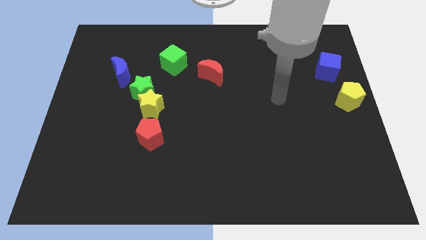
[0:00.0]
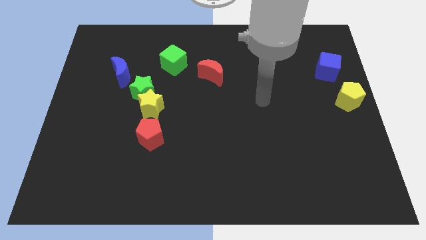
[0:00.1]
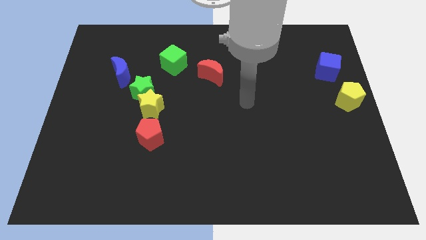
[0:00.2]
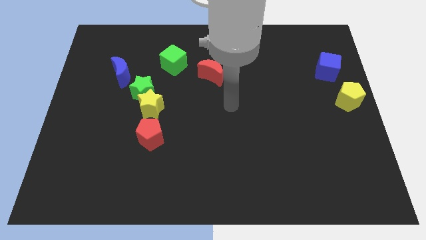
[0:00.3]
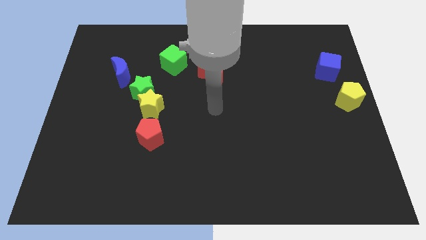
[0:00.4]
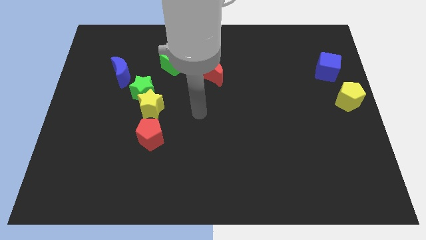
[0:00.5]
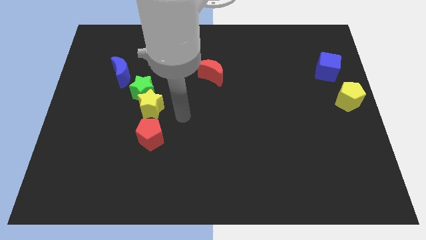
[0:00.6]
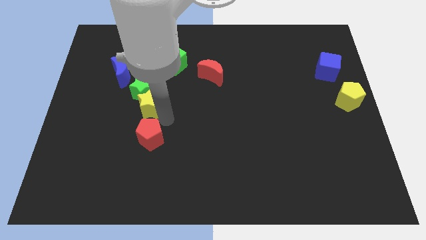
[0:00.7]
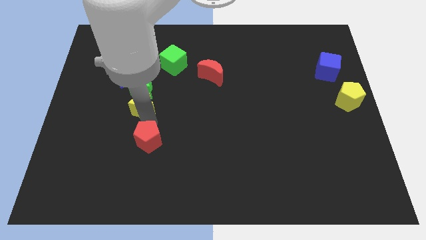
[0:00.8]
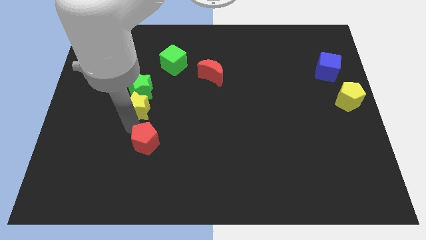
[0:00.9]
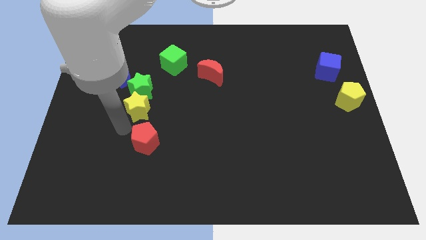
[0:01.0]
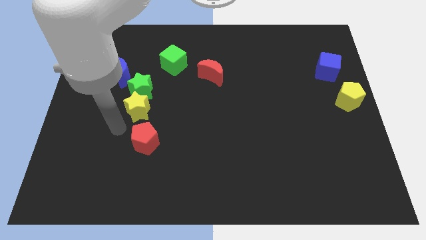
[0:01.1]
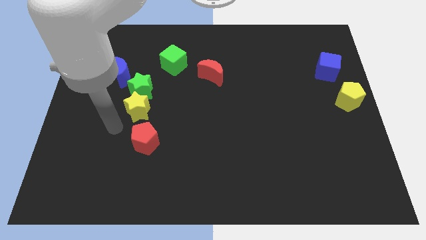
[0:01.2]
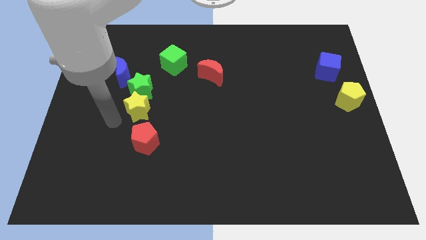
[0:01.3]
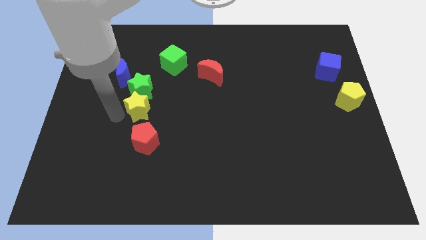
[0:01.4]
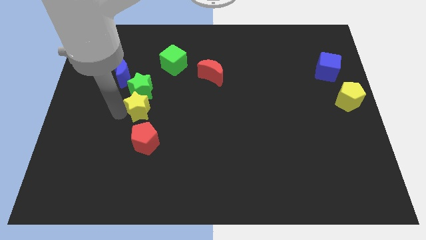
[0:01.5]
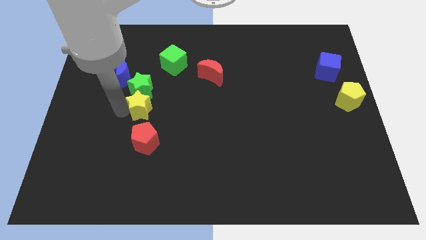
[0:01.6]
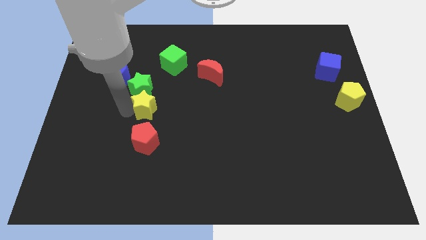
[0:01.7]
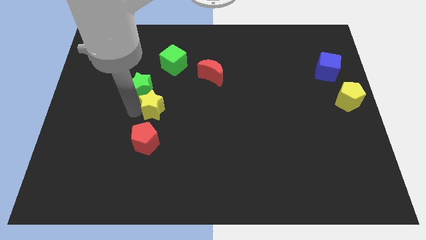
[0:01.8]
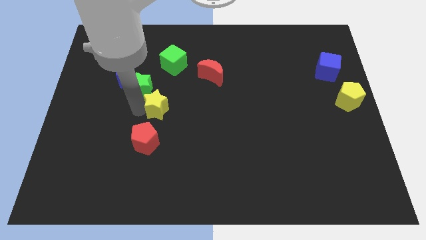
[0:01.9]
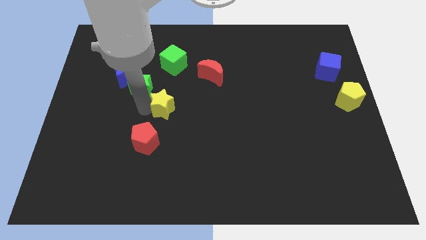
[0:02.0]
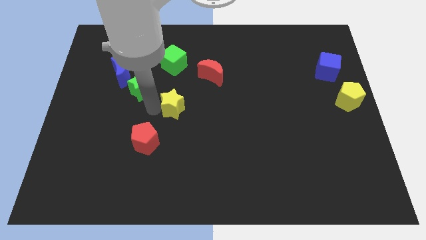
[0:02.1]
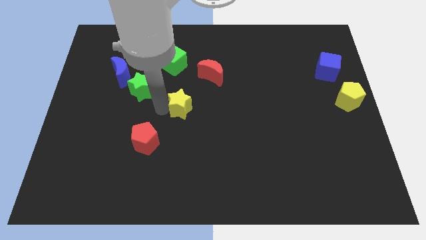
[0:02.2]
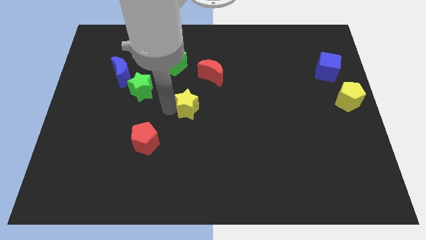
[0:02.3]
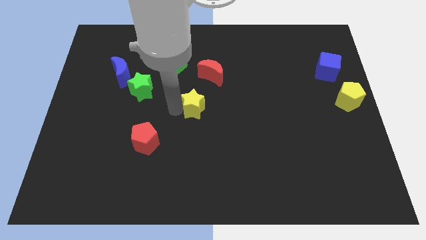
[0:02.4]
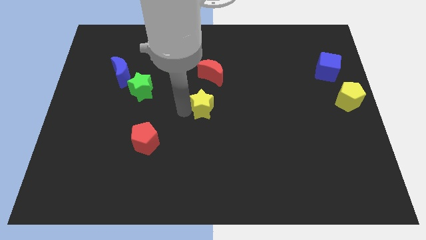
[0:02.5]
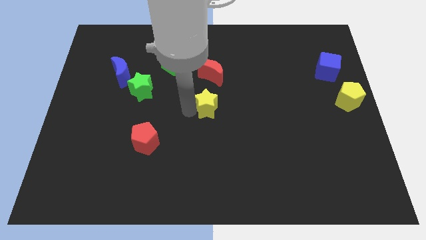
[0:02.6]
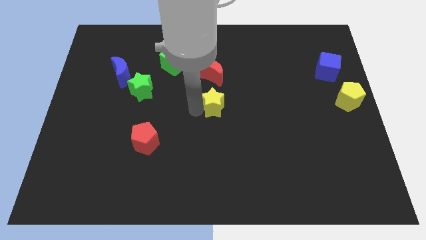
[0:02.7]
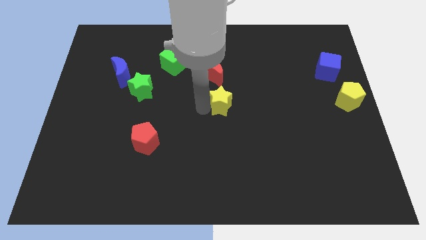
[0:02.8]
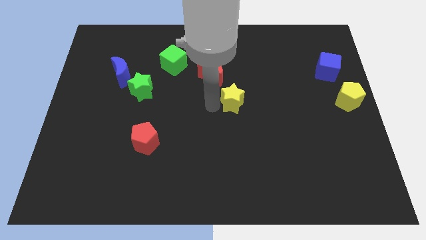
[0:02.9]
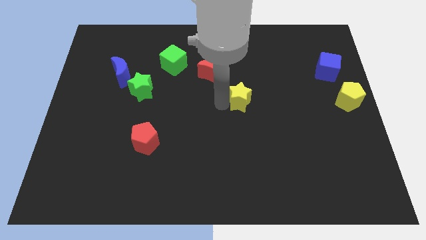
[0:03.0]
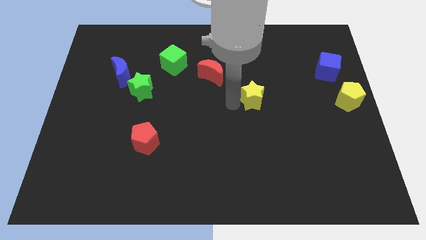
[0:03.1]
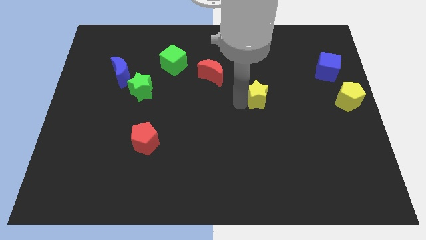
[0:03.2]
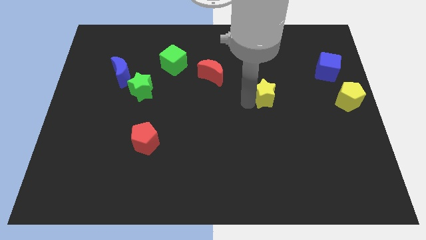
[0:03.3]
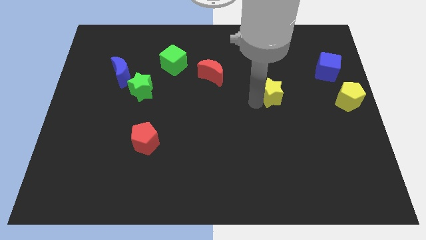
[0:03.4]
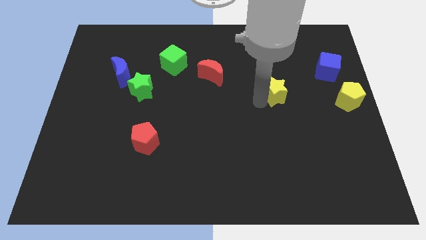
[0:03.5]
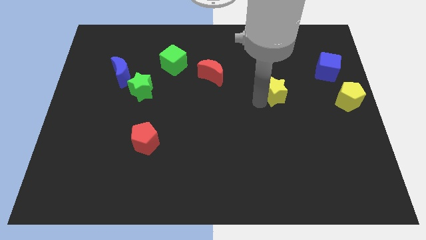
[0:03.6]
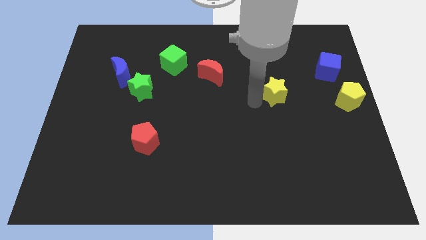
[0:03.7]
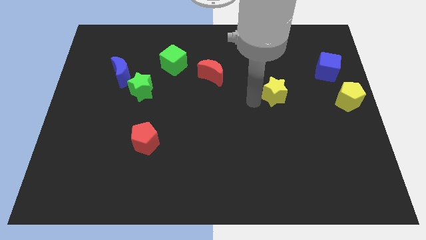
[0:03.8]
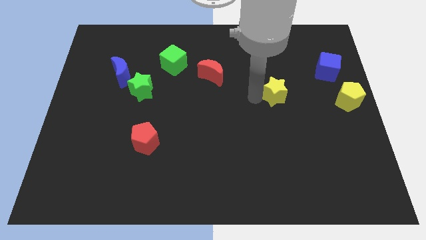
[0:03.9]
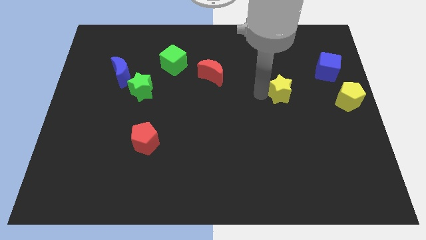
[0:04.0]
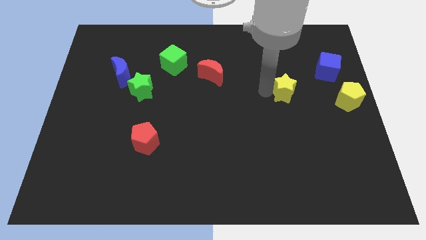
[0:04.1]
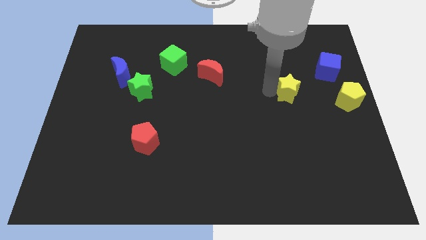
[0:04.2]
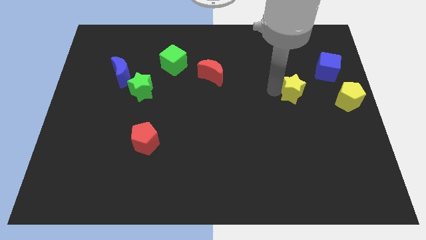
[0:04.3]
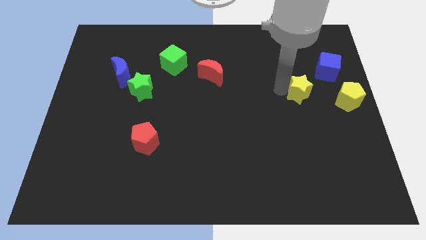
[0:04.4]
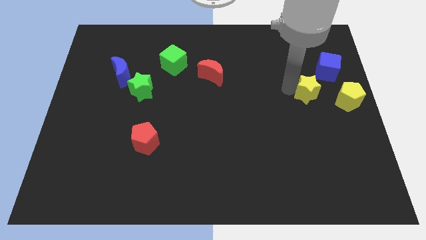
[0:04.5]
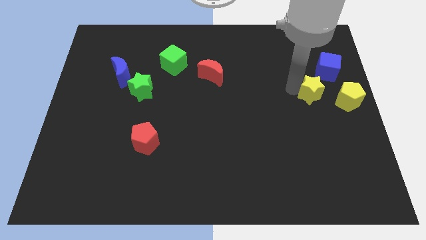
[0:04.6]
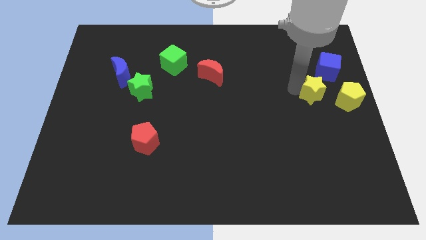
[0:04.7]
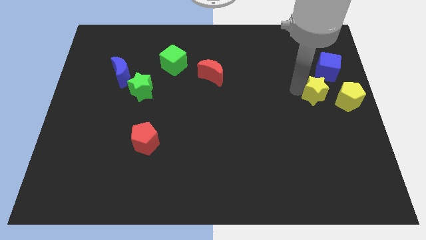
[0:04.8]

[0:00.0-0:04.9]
push the yellow star to the bottom side of the blue cube

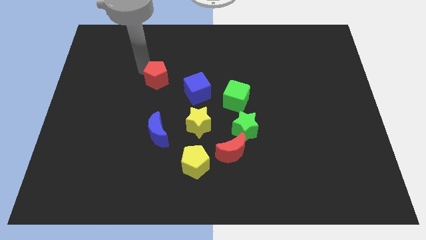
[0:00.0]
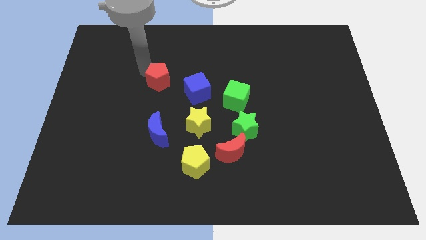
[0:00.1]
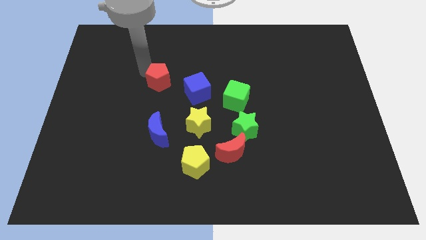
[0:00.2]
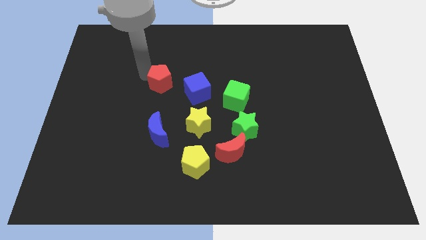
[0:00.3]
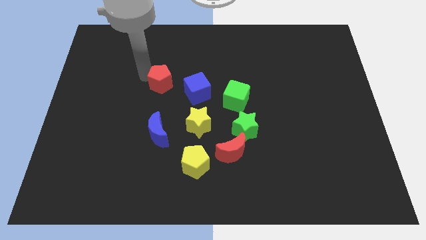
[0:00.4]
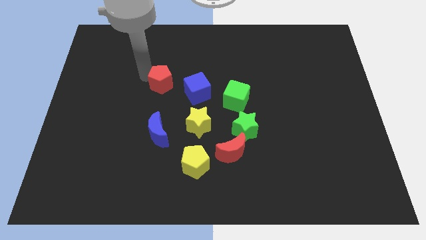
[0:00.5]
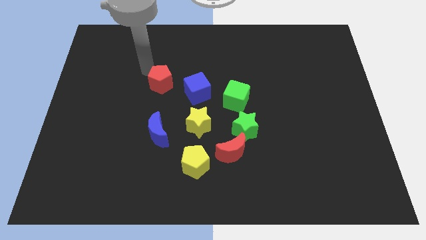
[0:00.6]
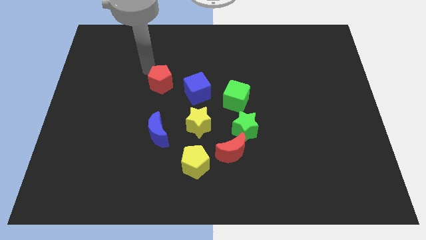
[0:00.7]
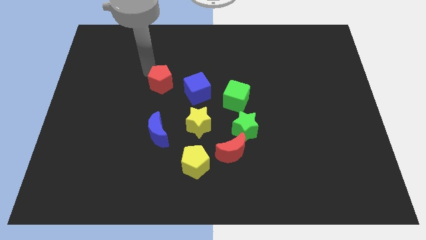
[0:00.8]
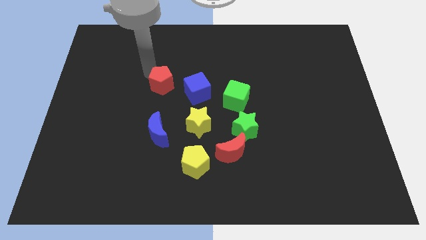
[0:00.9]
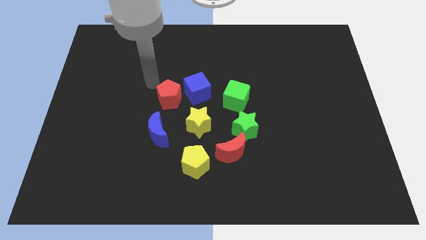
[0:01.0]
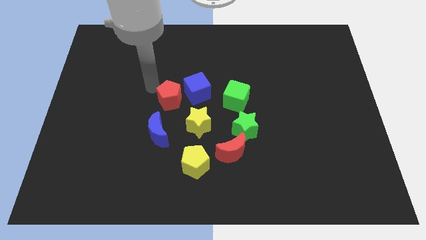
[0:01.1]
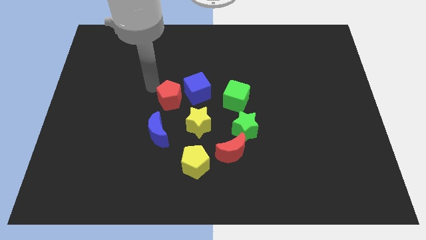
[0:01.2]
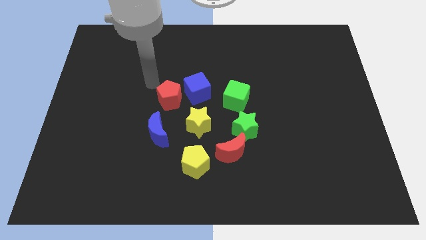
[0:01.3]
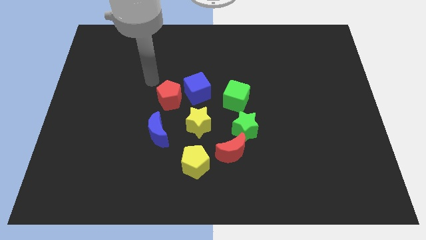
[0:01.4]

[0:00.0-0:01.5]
place red pentagon to the left of blue cube

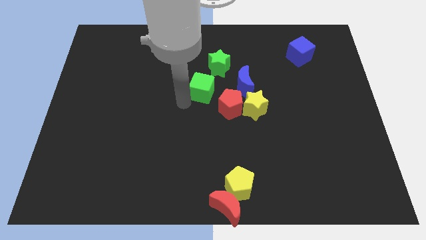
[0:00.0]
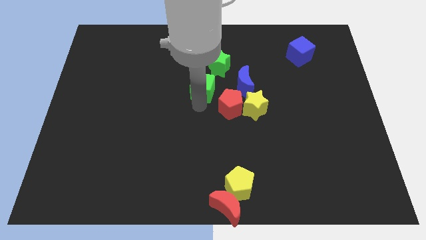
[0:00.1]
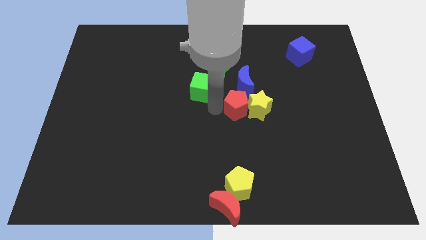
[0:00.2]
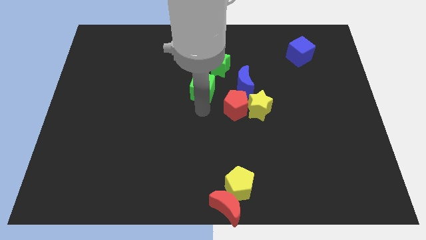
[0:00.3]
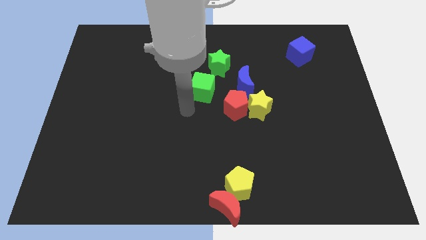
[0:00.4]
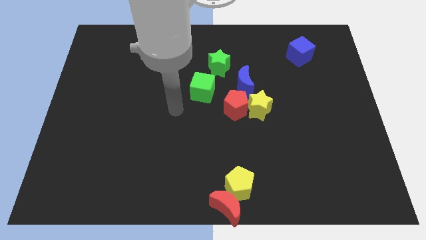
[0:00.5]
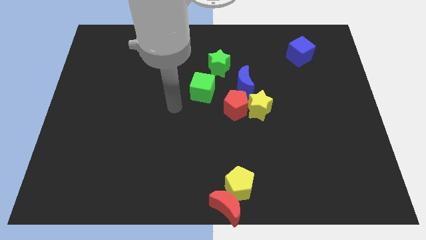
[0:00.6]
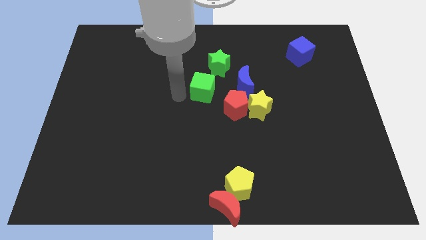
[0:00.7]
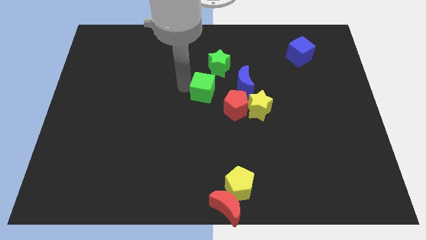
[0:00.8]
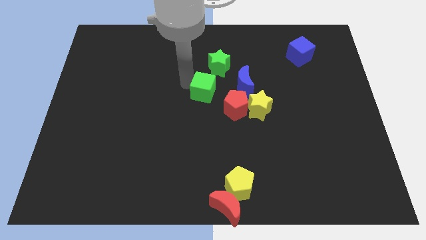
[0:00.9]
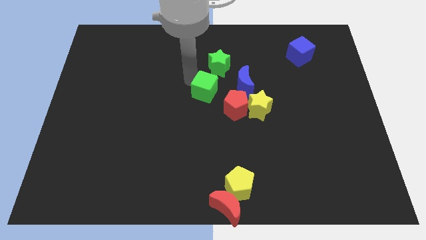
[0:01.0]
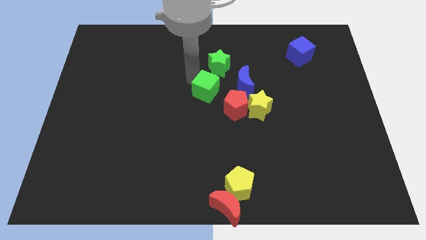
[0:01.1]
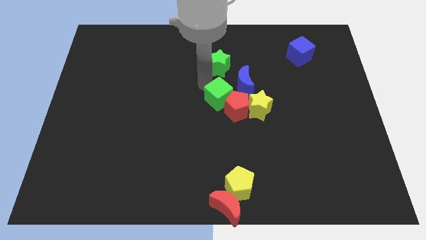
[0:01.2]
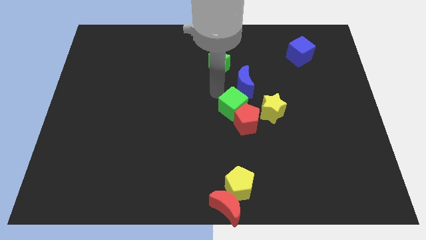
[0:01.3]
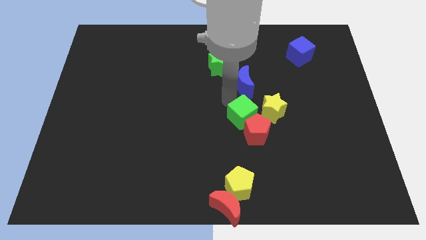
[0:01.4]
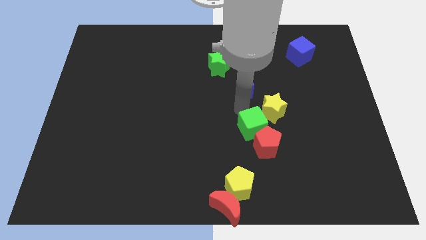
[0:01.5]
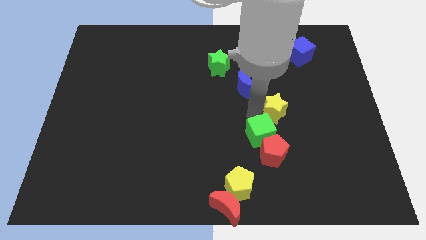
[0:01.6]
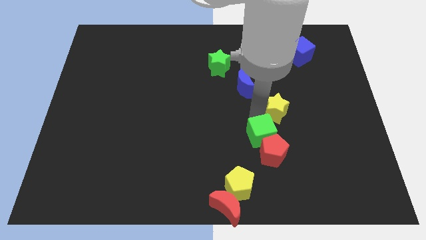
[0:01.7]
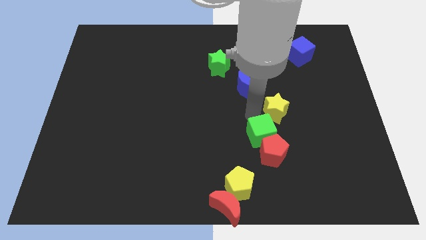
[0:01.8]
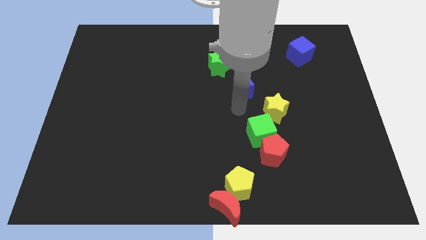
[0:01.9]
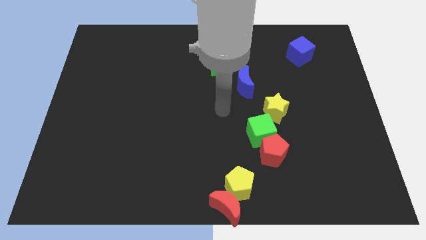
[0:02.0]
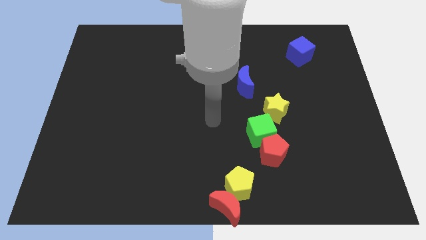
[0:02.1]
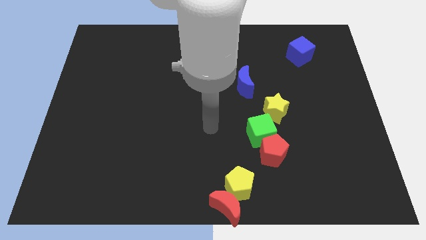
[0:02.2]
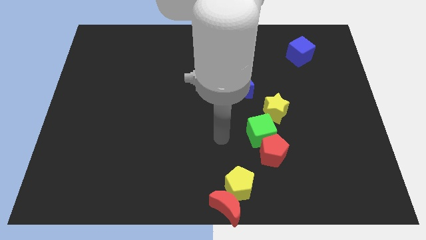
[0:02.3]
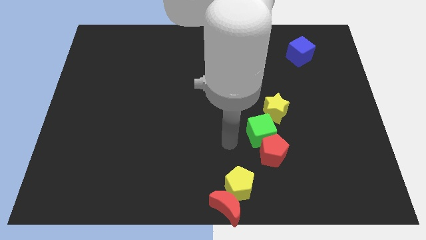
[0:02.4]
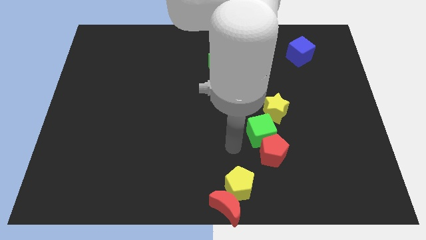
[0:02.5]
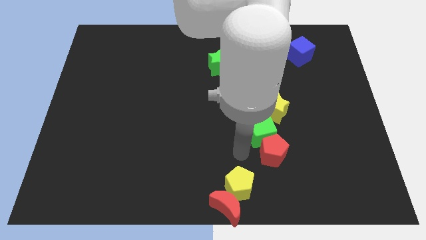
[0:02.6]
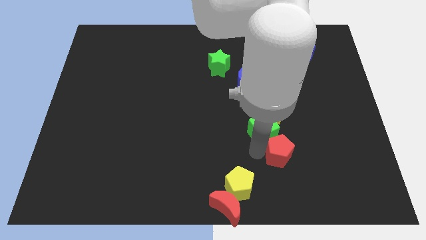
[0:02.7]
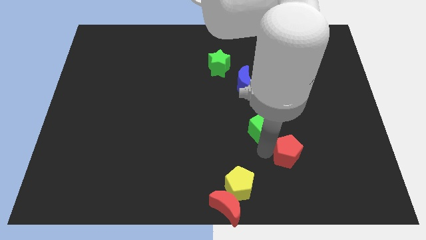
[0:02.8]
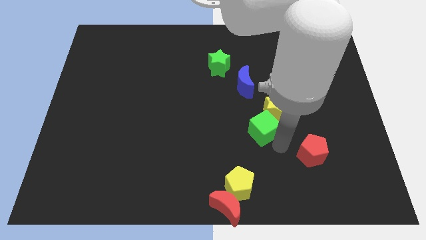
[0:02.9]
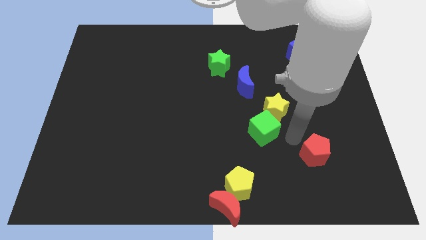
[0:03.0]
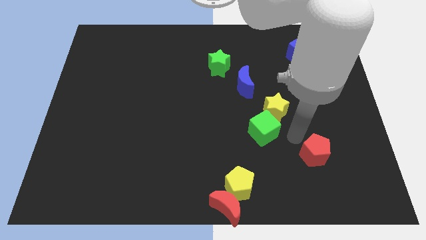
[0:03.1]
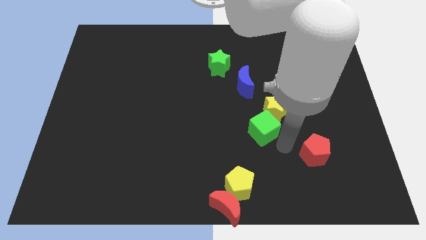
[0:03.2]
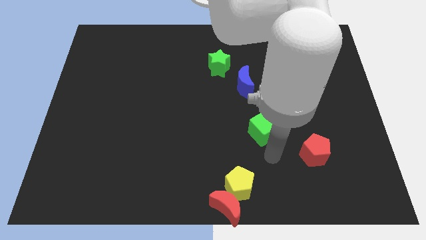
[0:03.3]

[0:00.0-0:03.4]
push the green cube and red pentagon diagonally on the top right side of the yellow pentagon
